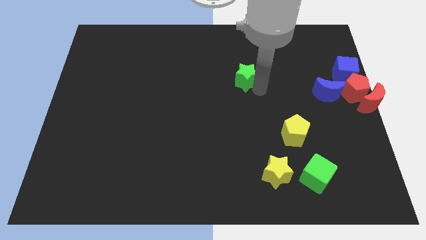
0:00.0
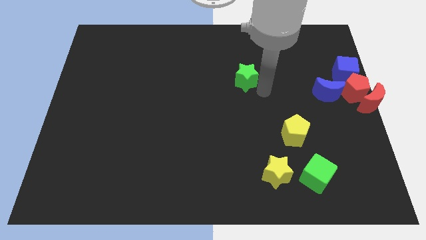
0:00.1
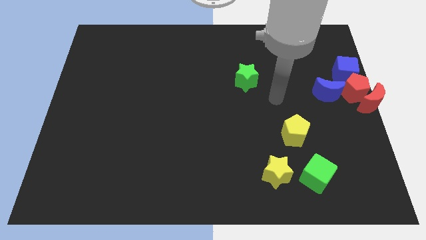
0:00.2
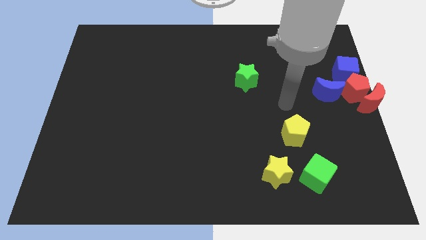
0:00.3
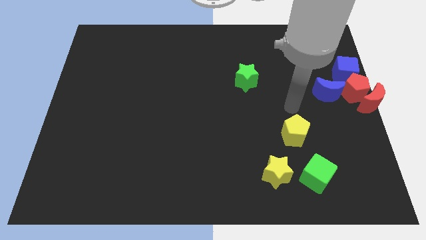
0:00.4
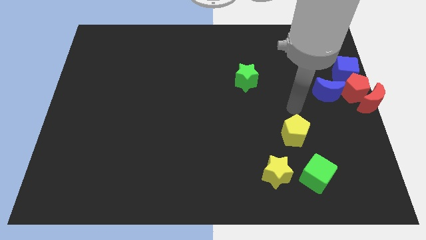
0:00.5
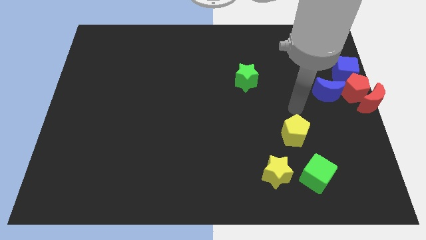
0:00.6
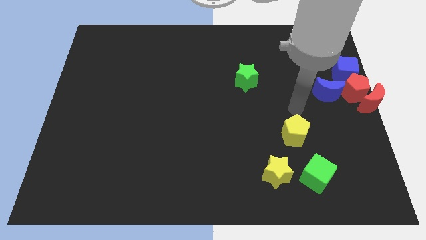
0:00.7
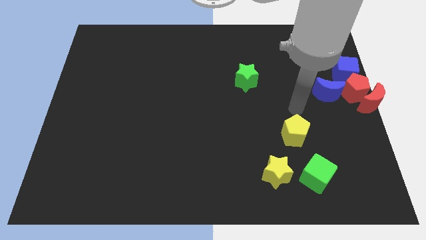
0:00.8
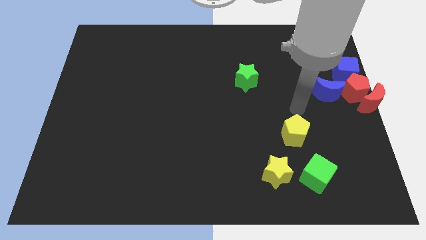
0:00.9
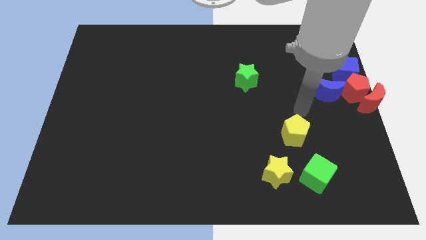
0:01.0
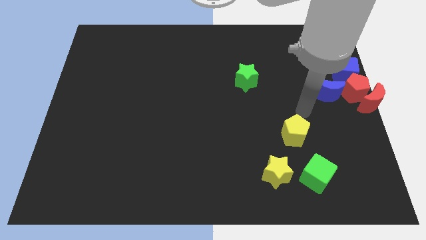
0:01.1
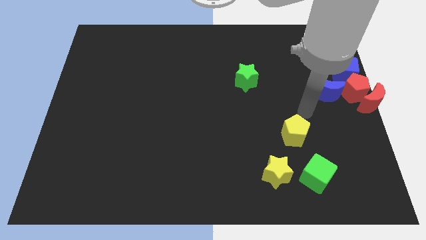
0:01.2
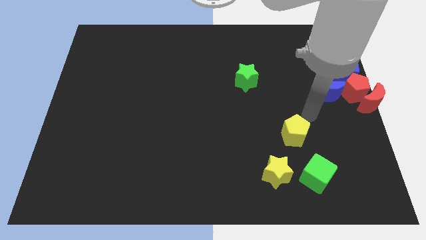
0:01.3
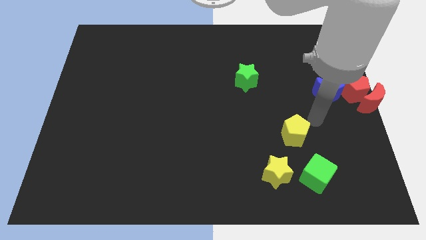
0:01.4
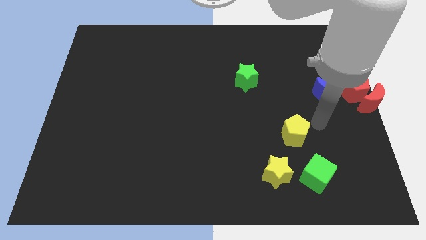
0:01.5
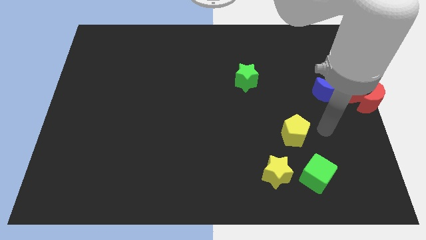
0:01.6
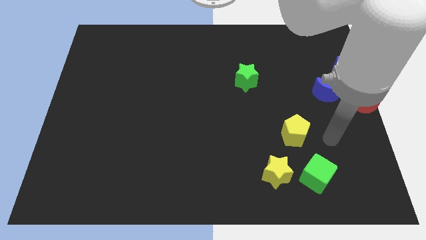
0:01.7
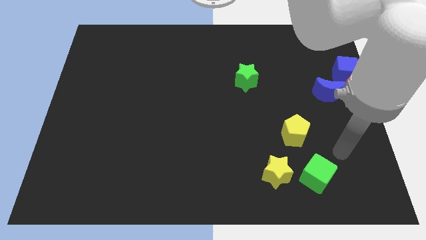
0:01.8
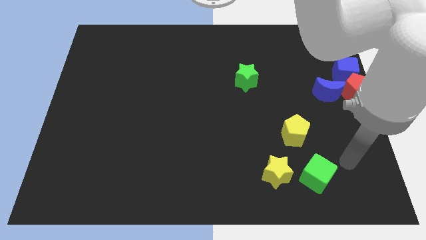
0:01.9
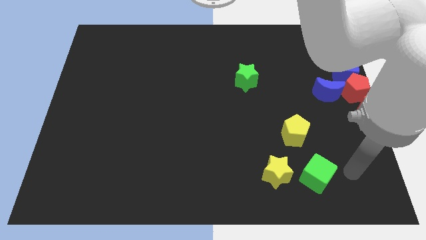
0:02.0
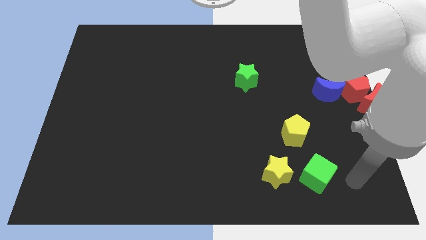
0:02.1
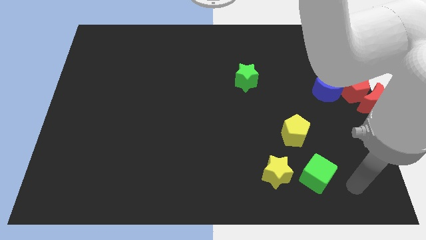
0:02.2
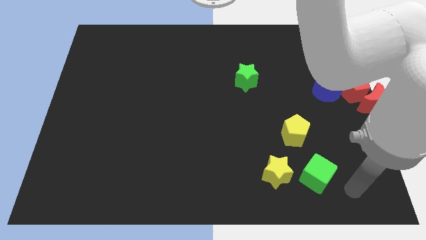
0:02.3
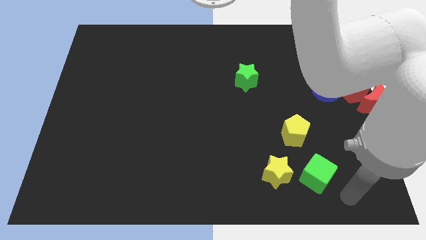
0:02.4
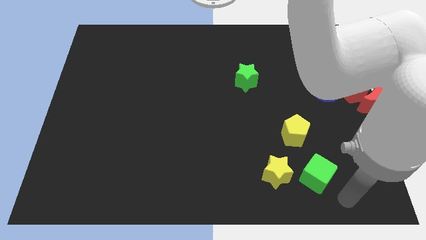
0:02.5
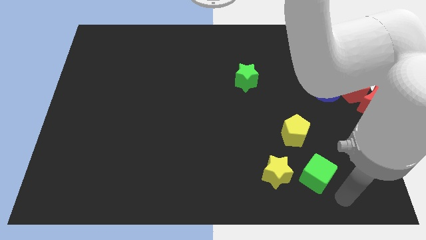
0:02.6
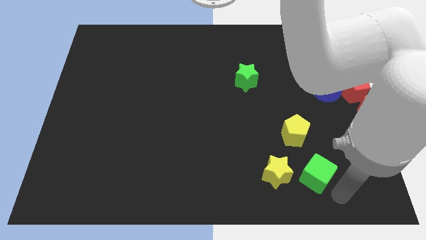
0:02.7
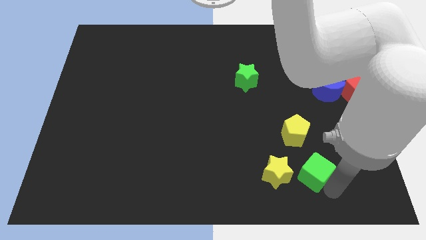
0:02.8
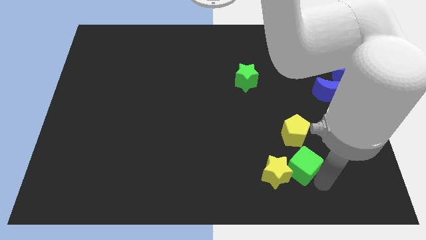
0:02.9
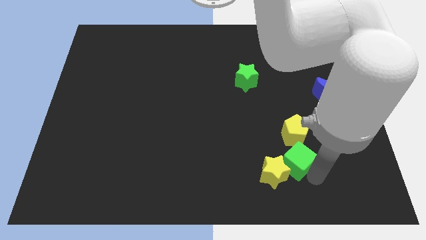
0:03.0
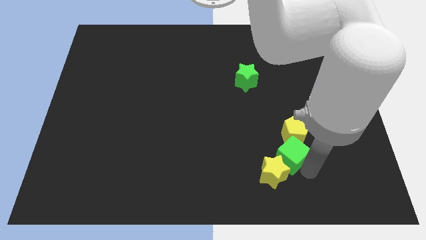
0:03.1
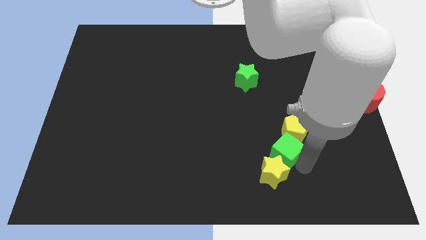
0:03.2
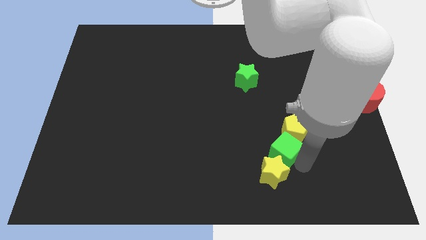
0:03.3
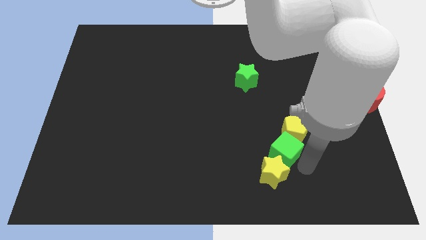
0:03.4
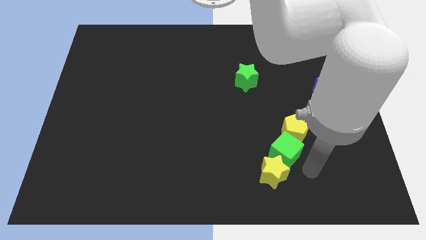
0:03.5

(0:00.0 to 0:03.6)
place green cube in between yellow star and yellow pentagon

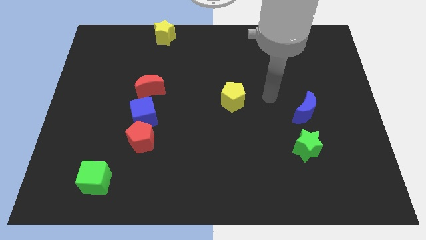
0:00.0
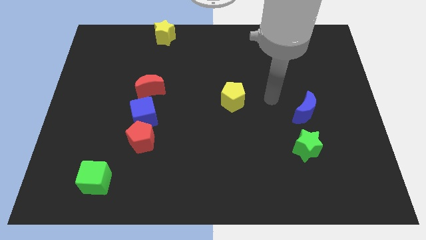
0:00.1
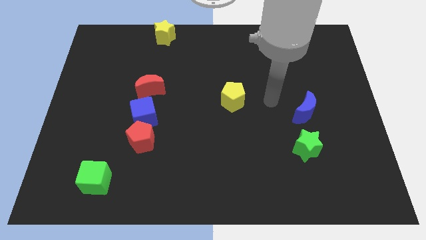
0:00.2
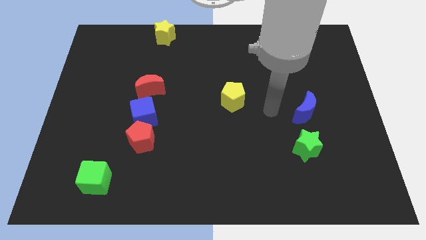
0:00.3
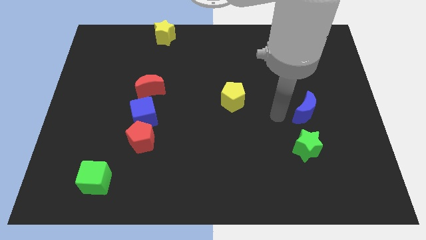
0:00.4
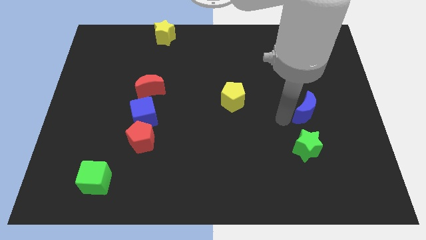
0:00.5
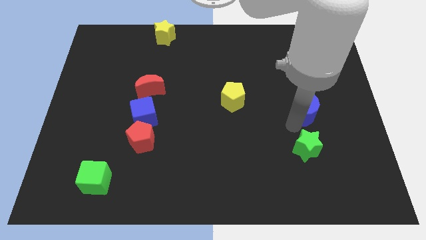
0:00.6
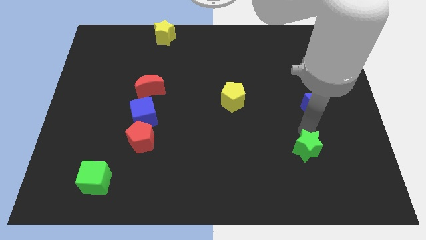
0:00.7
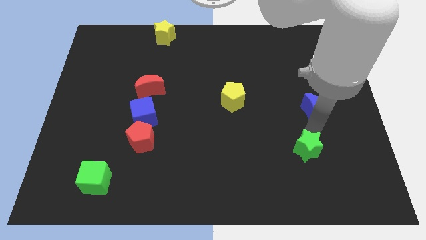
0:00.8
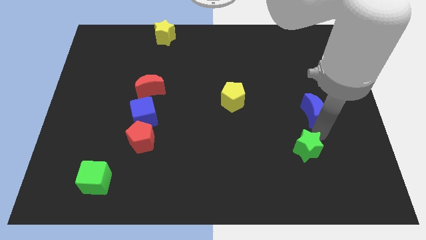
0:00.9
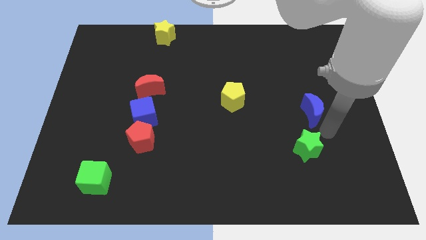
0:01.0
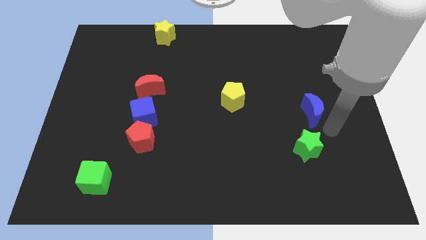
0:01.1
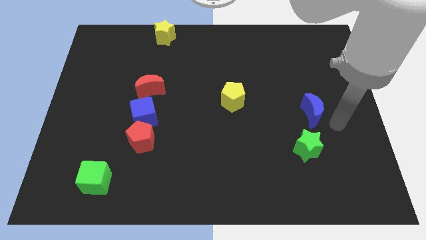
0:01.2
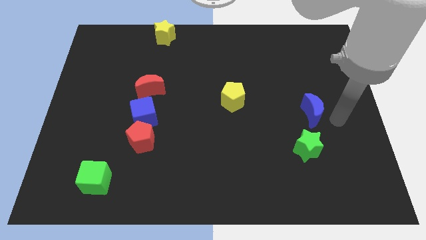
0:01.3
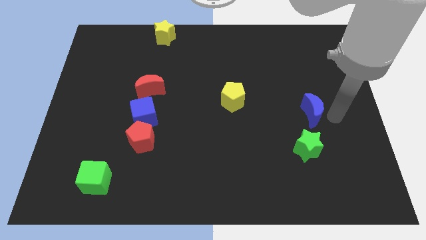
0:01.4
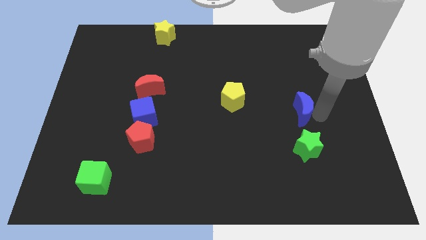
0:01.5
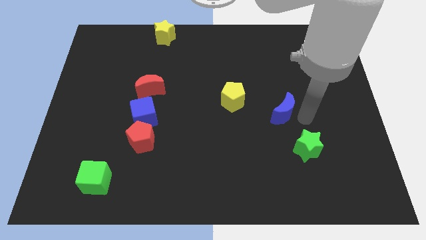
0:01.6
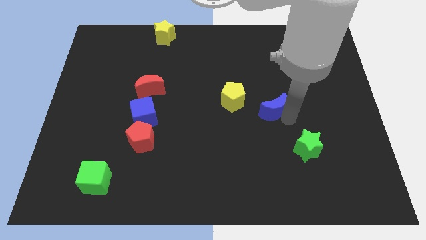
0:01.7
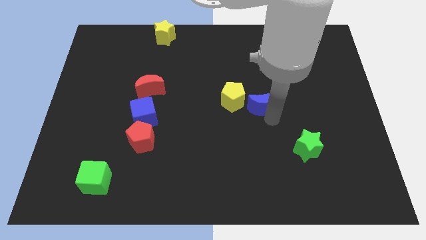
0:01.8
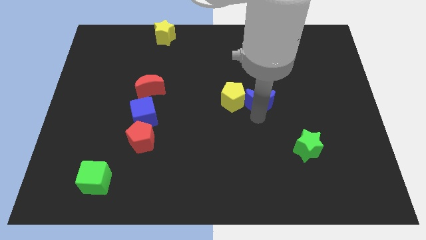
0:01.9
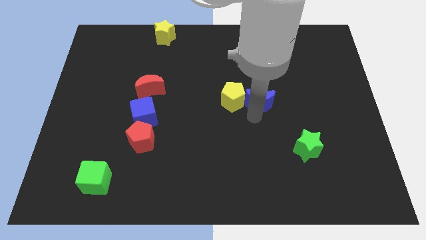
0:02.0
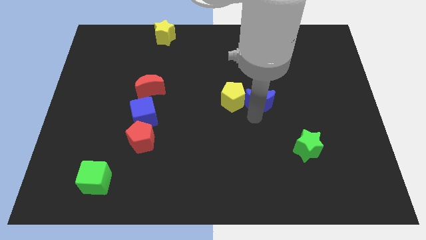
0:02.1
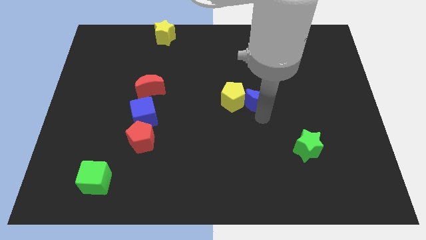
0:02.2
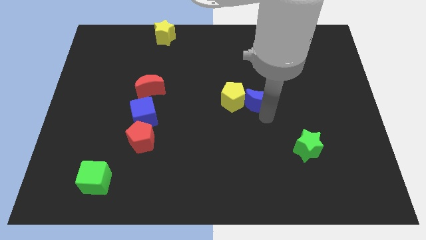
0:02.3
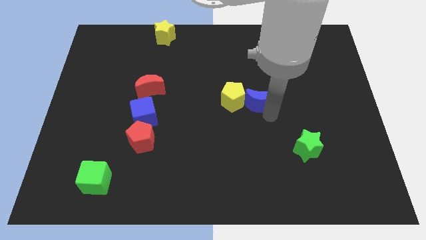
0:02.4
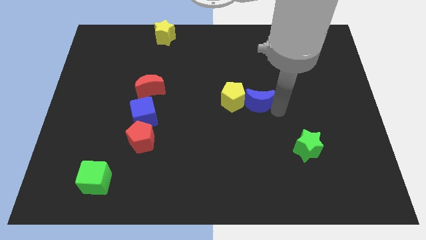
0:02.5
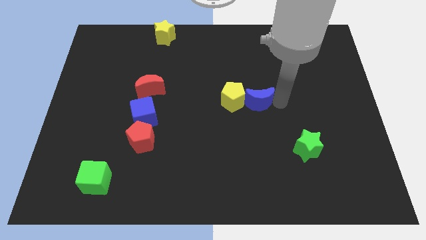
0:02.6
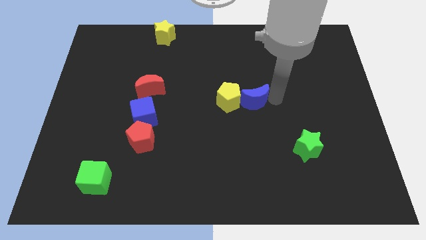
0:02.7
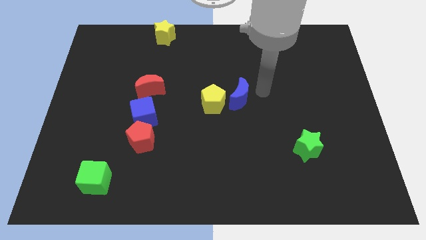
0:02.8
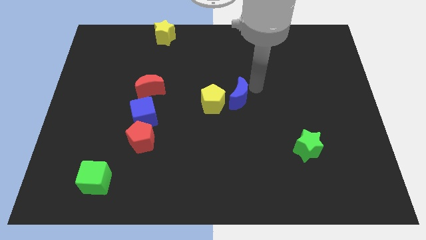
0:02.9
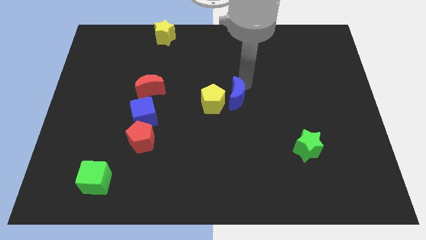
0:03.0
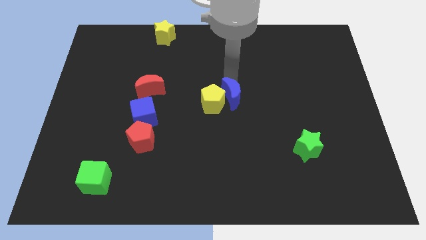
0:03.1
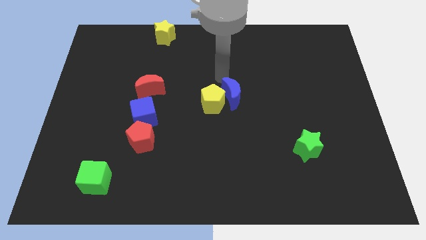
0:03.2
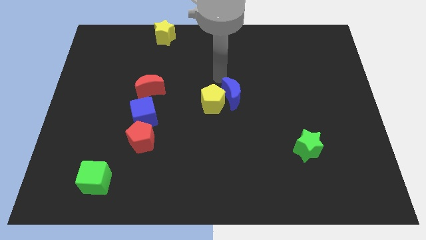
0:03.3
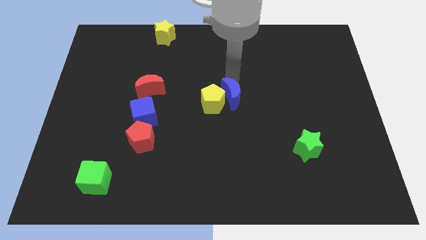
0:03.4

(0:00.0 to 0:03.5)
slide the blue moon to the right of the yellow pentagon

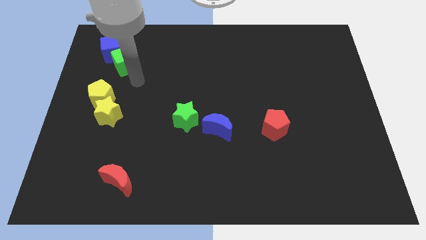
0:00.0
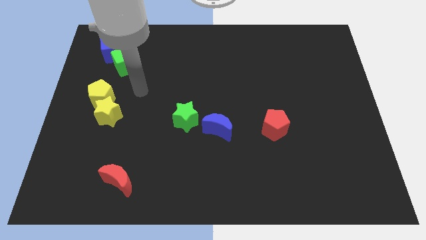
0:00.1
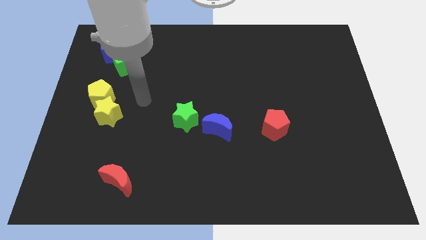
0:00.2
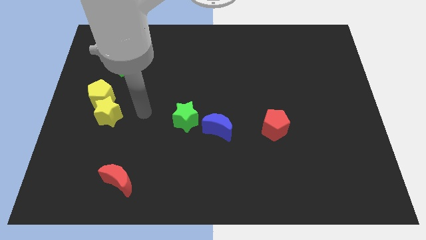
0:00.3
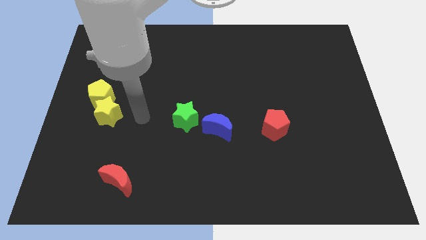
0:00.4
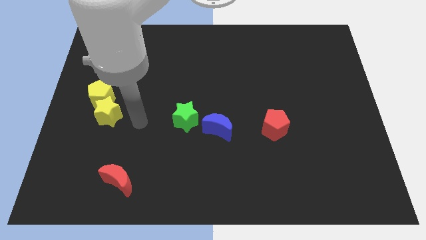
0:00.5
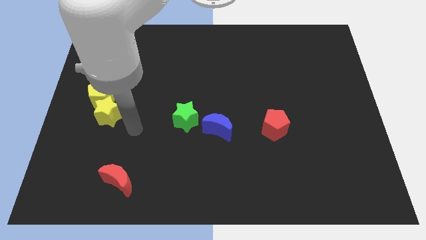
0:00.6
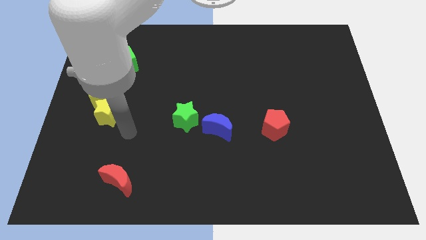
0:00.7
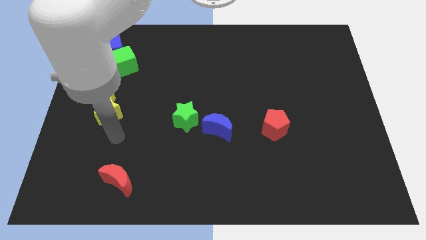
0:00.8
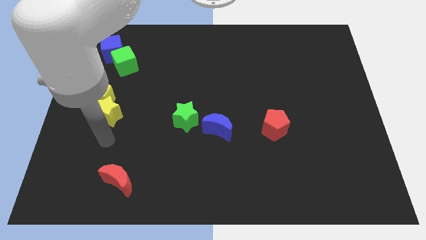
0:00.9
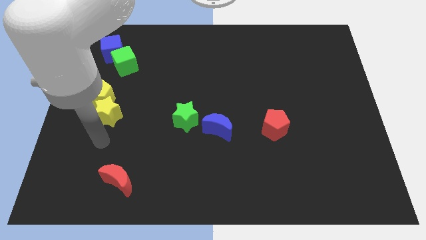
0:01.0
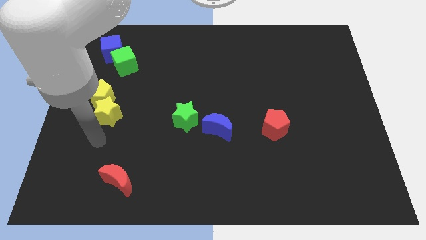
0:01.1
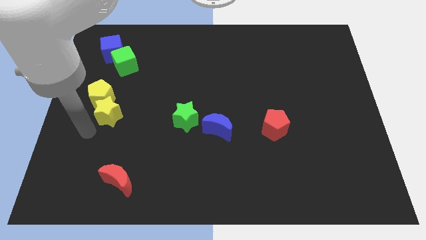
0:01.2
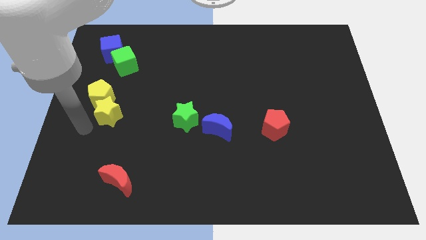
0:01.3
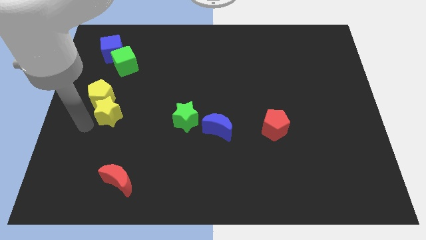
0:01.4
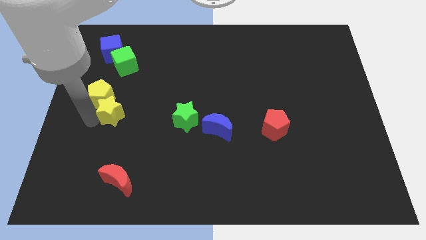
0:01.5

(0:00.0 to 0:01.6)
move your arm to the left side of the yellow star

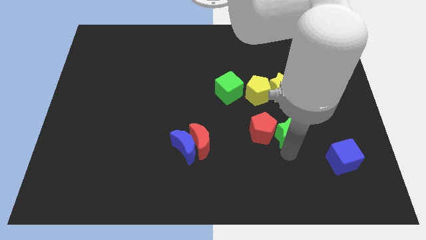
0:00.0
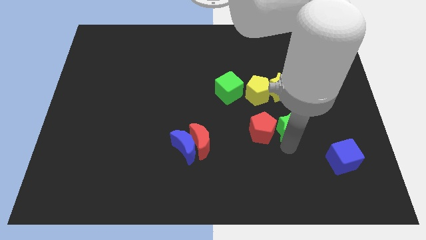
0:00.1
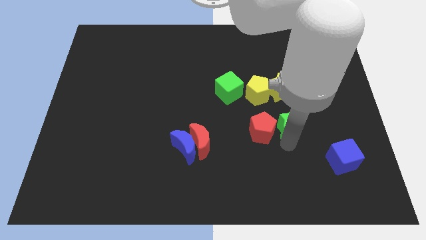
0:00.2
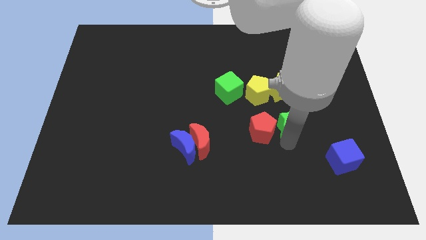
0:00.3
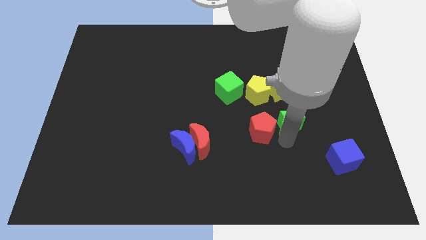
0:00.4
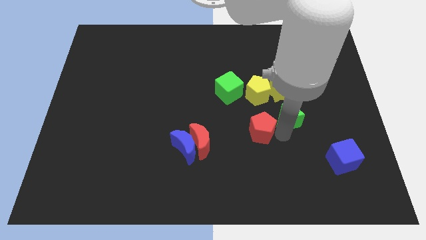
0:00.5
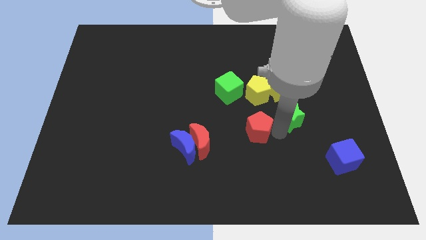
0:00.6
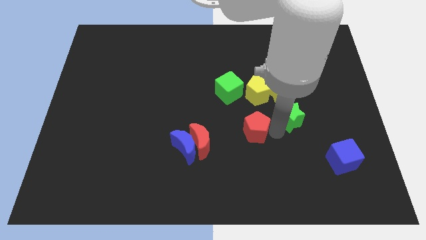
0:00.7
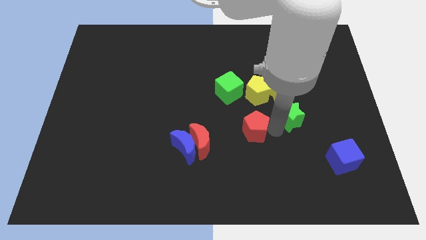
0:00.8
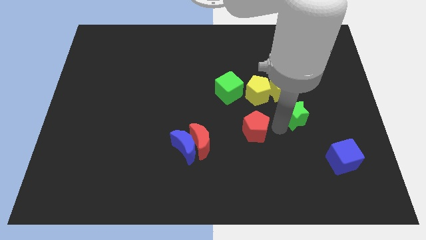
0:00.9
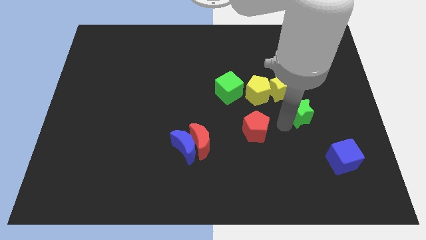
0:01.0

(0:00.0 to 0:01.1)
separate the green star and red pentagon
